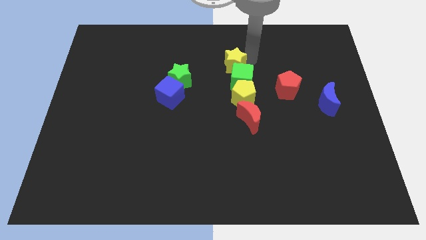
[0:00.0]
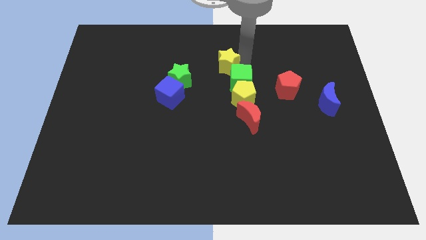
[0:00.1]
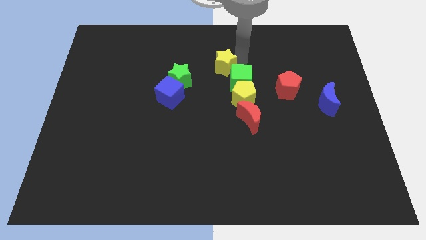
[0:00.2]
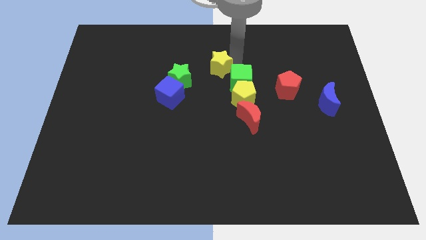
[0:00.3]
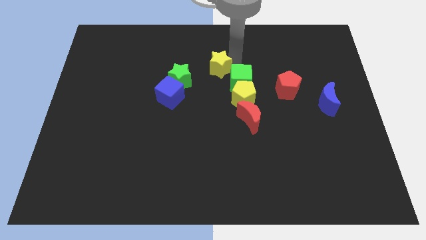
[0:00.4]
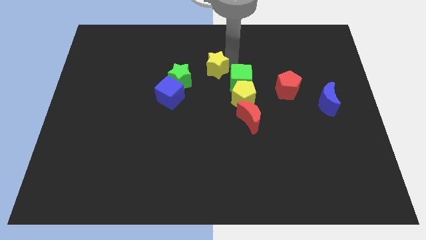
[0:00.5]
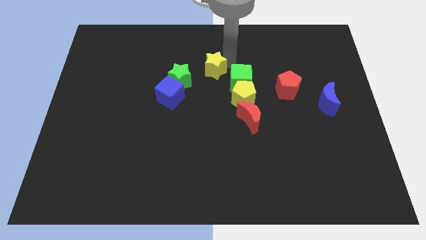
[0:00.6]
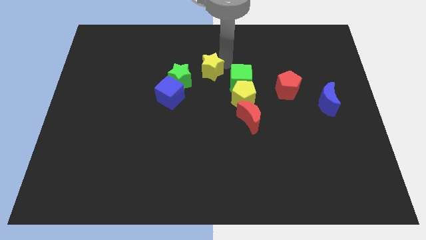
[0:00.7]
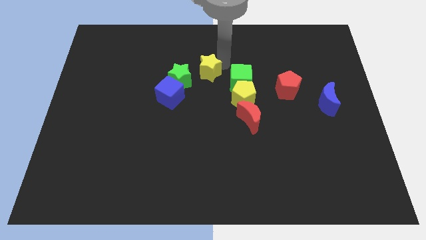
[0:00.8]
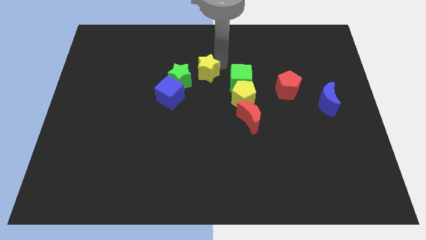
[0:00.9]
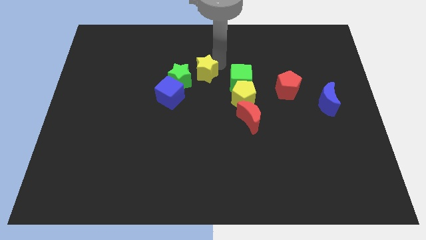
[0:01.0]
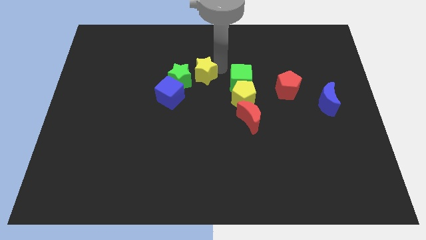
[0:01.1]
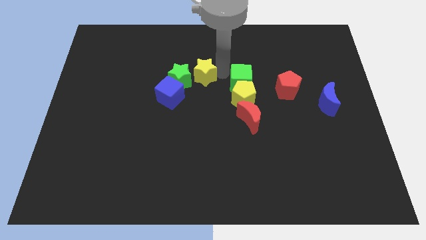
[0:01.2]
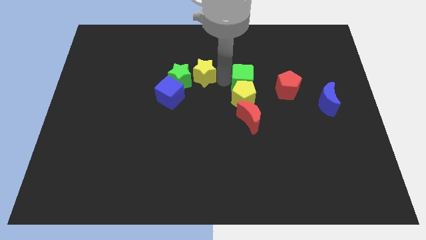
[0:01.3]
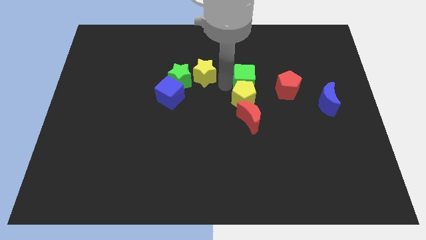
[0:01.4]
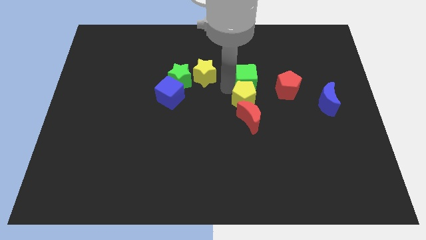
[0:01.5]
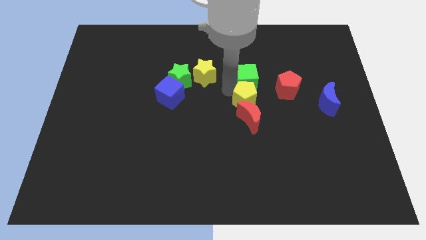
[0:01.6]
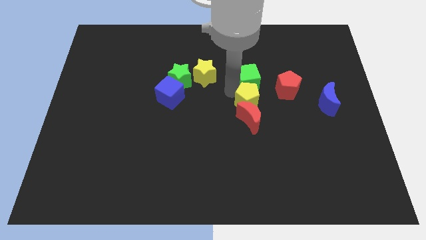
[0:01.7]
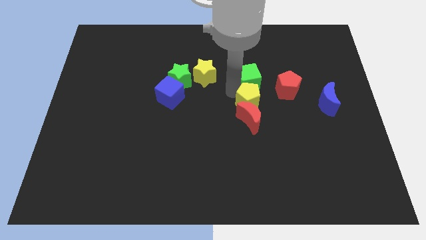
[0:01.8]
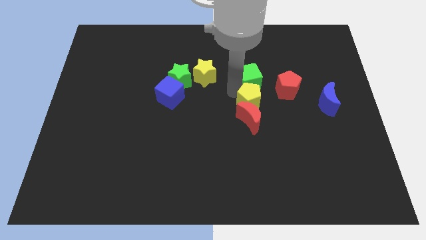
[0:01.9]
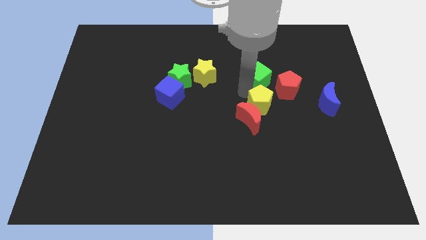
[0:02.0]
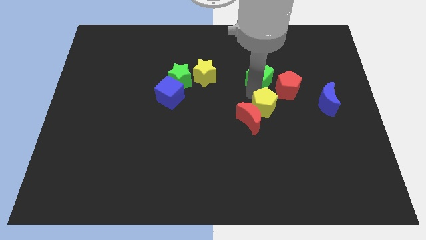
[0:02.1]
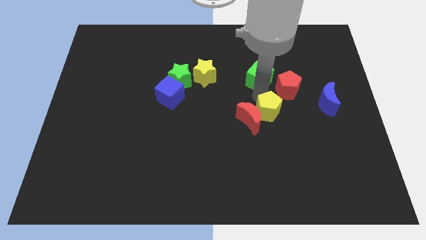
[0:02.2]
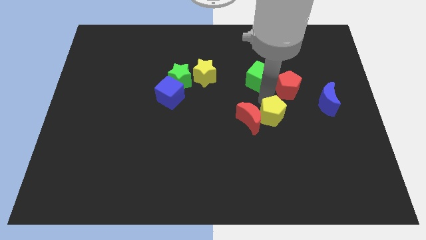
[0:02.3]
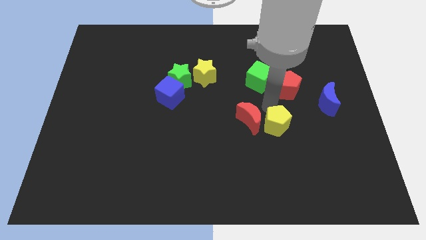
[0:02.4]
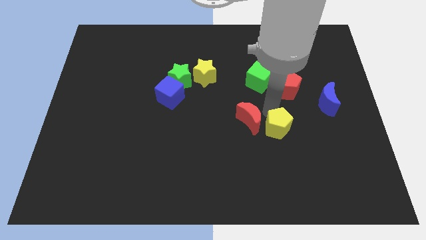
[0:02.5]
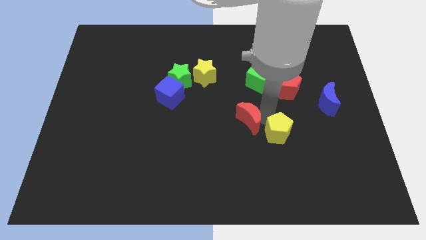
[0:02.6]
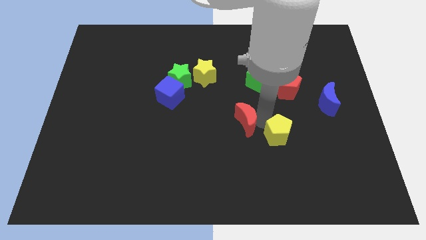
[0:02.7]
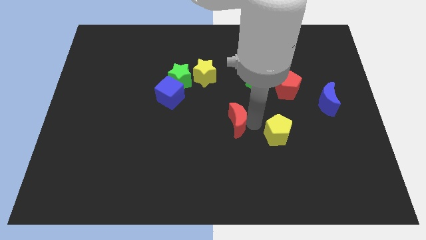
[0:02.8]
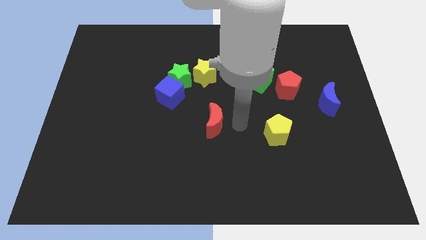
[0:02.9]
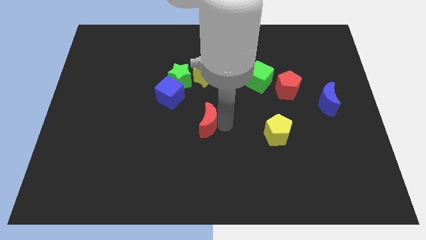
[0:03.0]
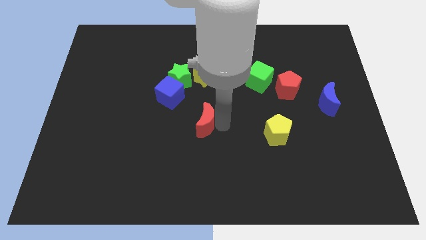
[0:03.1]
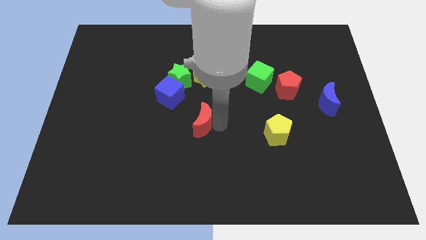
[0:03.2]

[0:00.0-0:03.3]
push the yellow star towards the green star

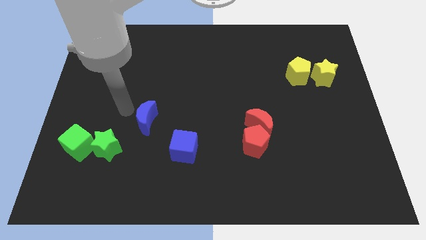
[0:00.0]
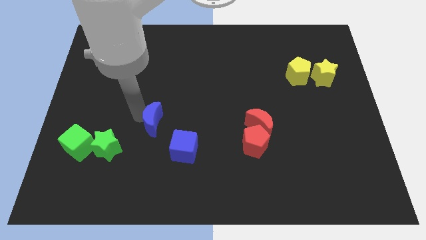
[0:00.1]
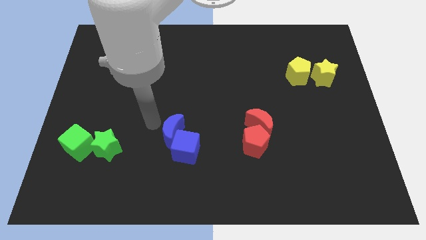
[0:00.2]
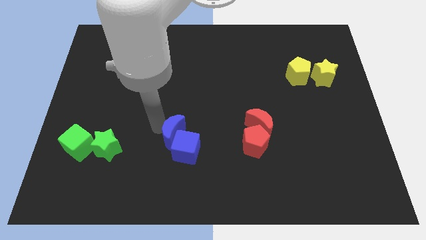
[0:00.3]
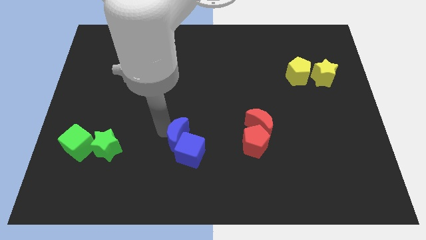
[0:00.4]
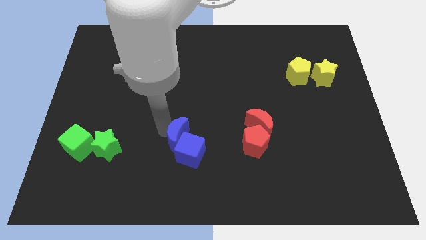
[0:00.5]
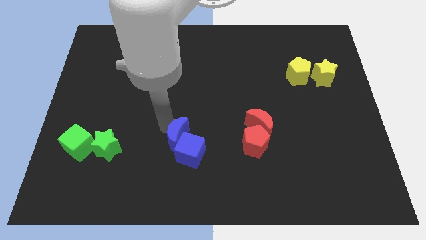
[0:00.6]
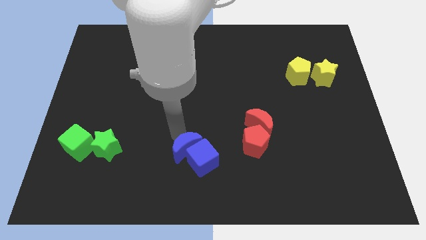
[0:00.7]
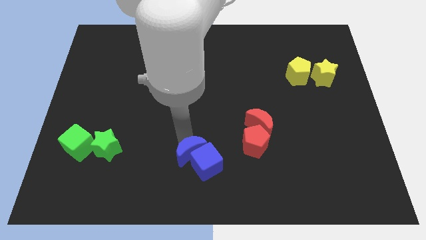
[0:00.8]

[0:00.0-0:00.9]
push the blue crescent into the blue cube

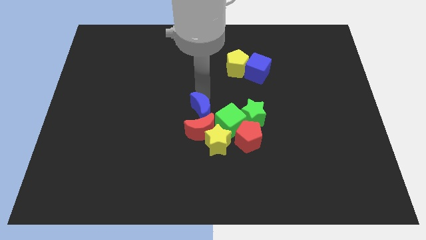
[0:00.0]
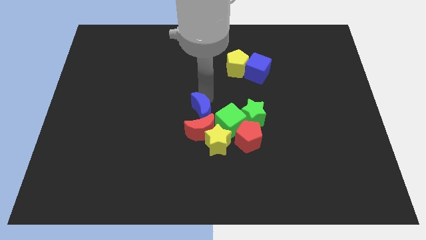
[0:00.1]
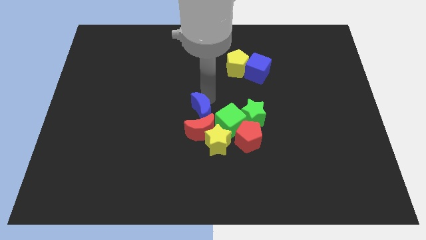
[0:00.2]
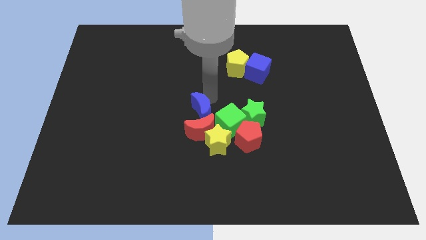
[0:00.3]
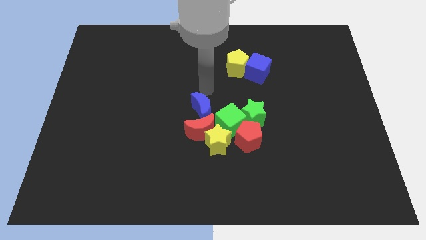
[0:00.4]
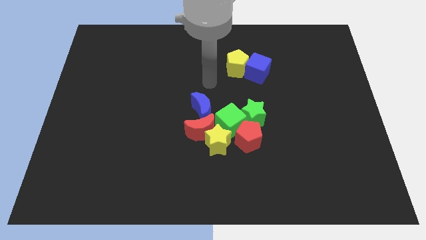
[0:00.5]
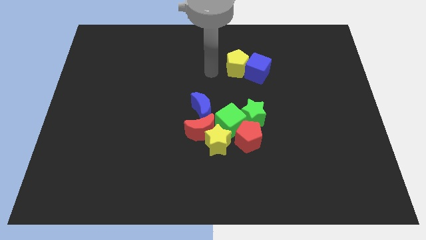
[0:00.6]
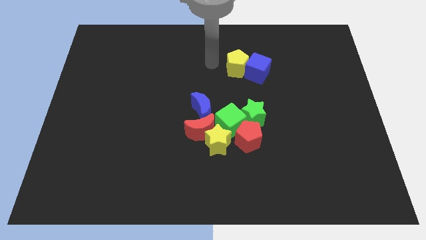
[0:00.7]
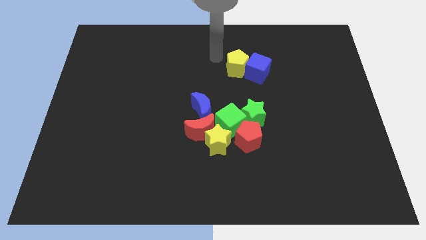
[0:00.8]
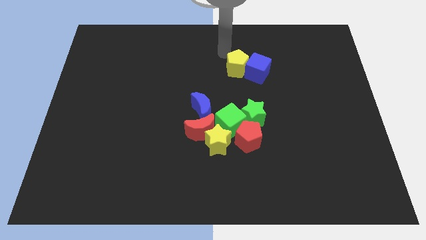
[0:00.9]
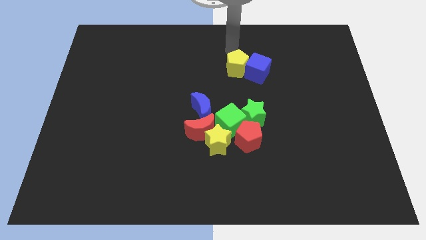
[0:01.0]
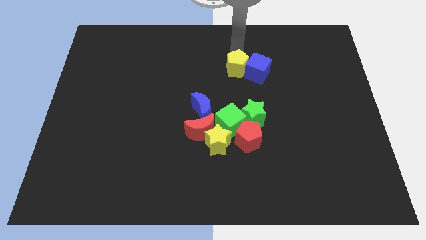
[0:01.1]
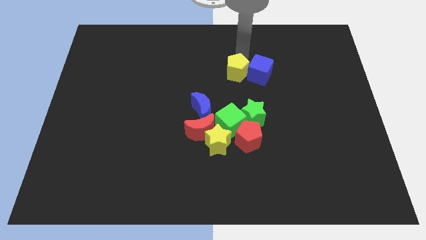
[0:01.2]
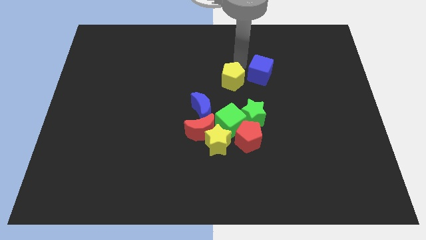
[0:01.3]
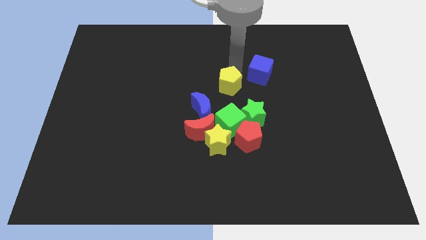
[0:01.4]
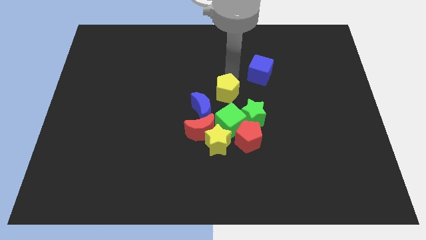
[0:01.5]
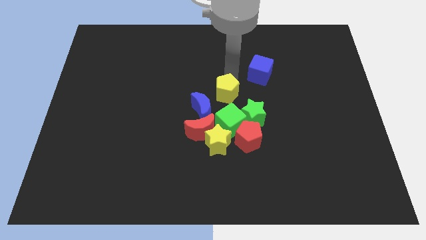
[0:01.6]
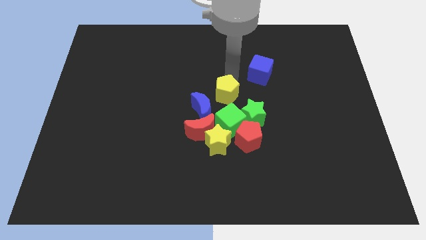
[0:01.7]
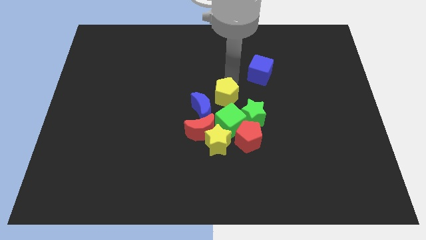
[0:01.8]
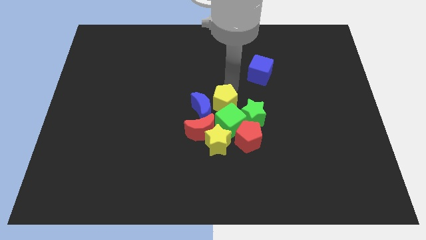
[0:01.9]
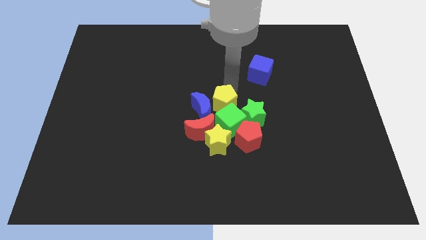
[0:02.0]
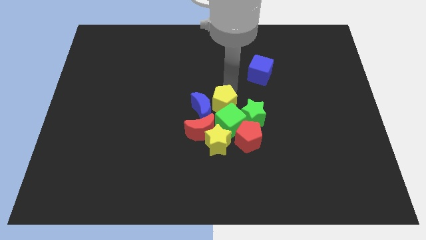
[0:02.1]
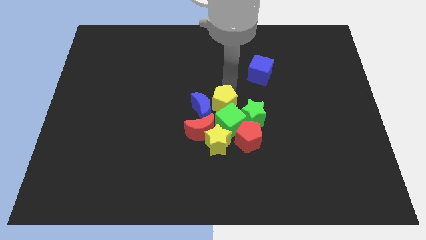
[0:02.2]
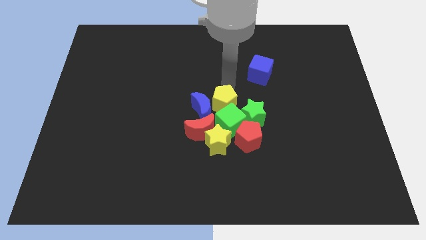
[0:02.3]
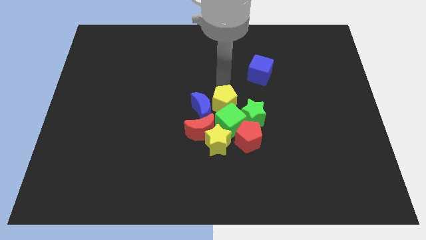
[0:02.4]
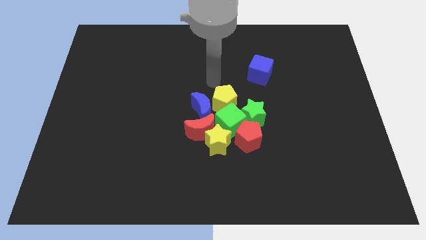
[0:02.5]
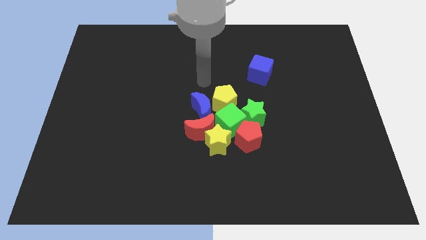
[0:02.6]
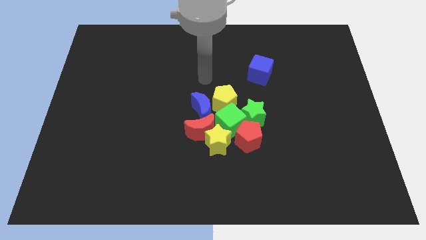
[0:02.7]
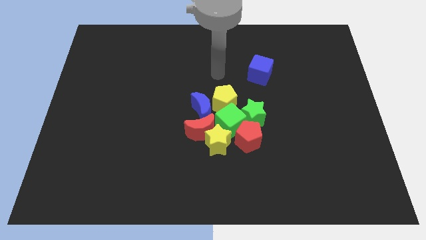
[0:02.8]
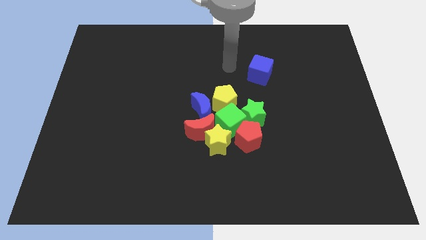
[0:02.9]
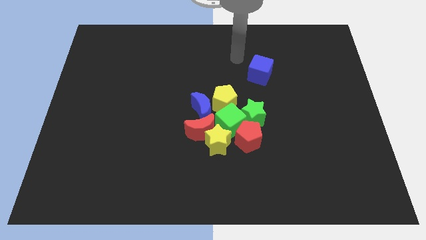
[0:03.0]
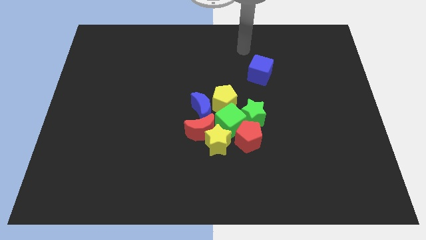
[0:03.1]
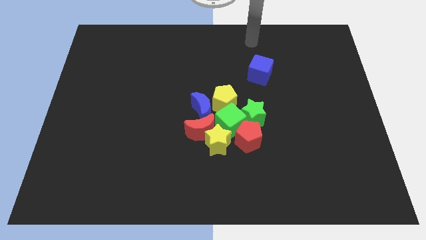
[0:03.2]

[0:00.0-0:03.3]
move the yellow pentagon above the green cube

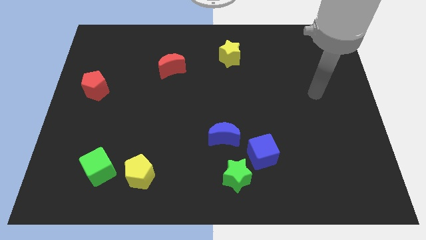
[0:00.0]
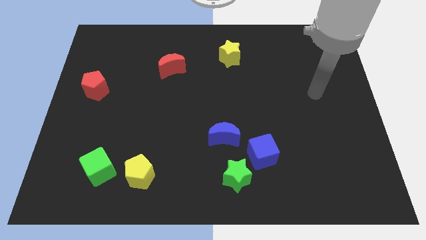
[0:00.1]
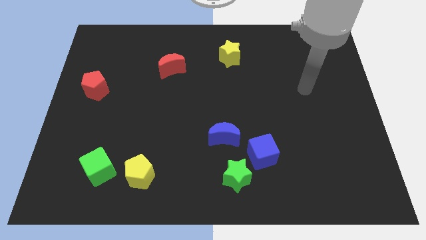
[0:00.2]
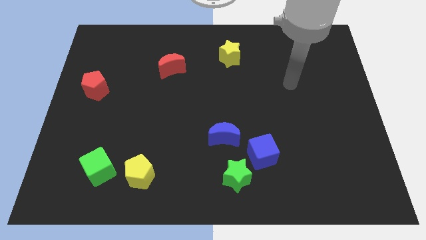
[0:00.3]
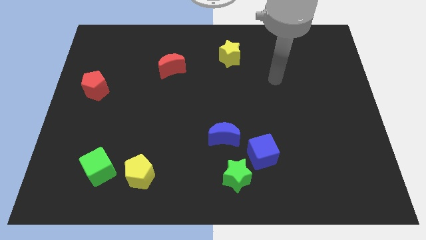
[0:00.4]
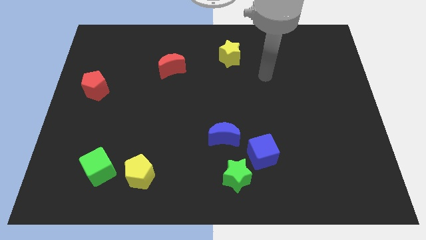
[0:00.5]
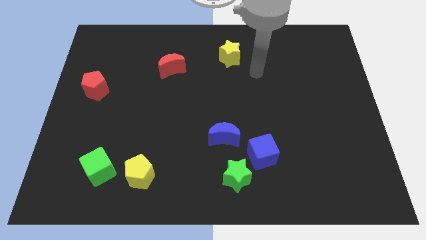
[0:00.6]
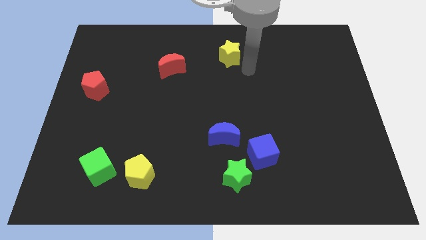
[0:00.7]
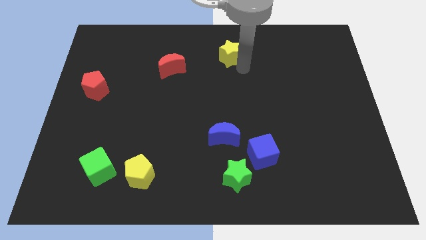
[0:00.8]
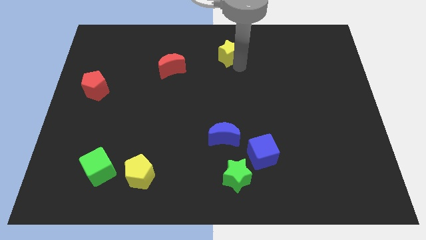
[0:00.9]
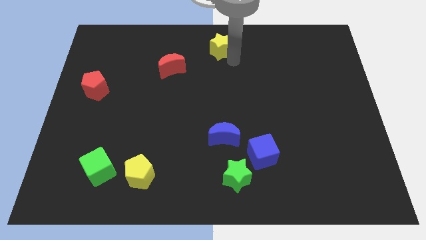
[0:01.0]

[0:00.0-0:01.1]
move the arm near the yellow star

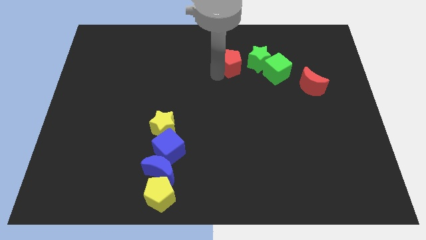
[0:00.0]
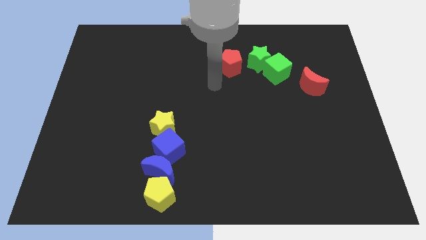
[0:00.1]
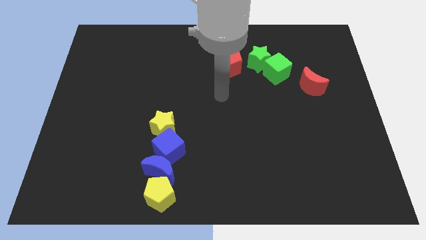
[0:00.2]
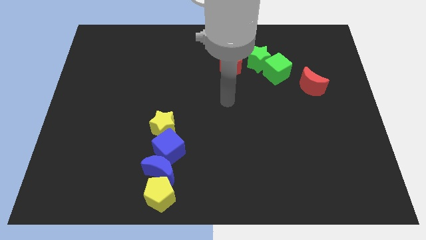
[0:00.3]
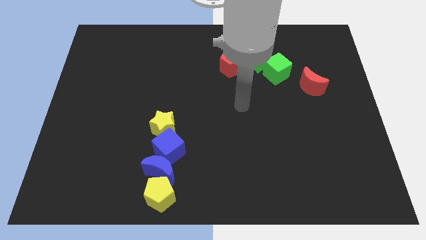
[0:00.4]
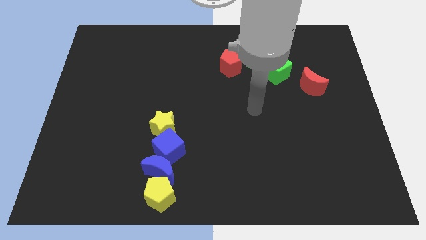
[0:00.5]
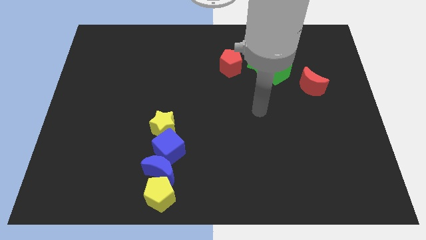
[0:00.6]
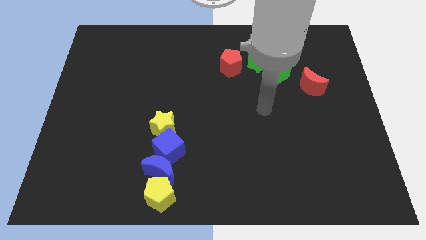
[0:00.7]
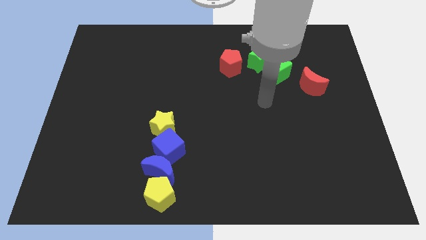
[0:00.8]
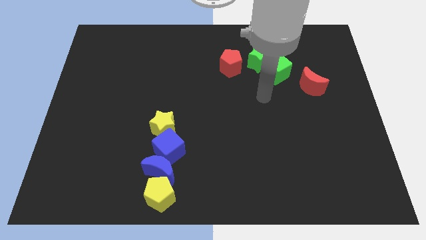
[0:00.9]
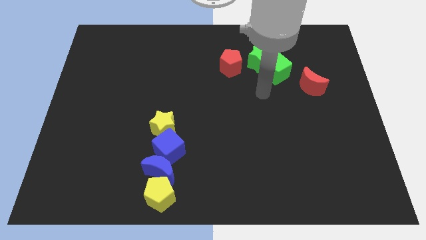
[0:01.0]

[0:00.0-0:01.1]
move your hand close to the bottom side of the green cube
